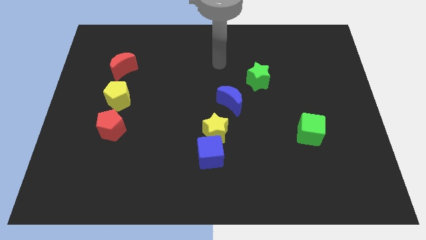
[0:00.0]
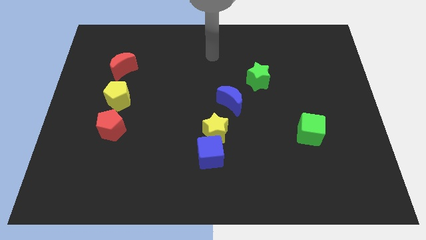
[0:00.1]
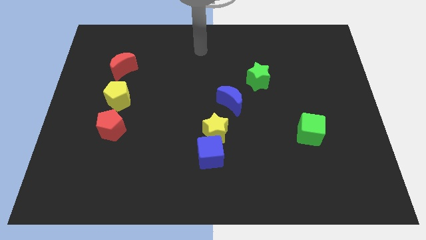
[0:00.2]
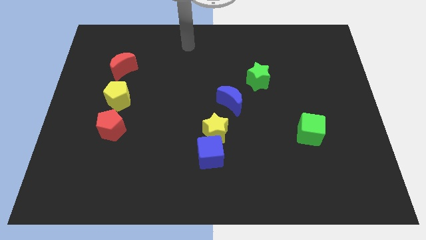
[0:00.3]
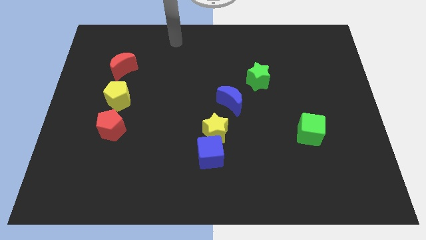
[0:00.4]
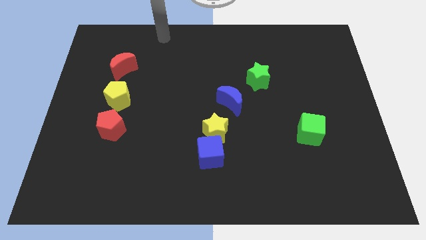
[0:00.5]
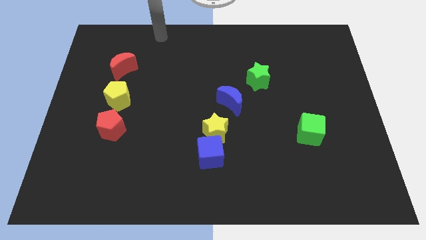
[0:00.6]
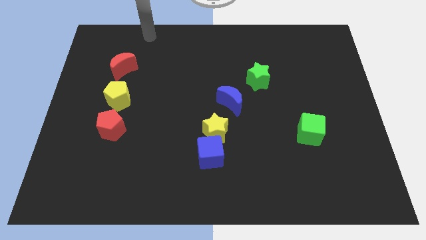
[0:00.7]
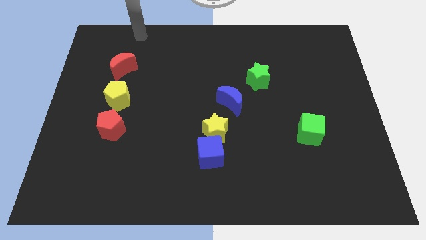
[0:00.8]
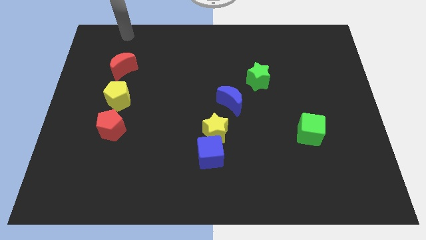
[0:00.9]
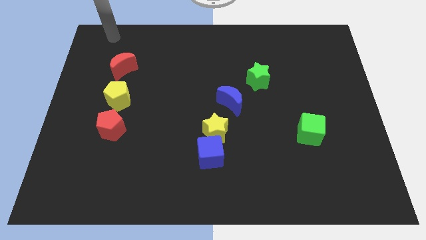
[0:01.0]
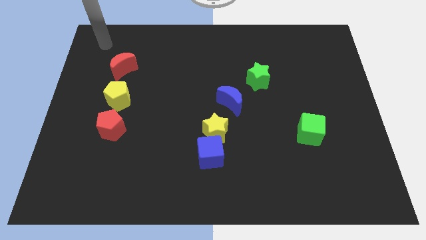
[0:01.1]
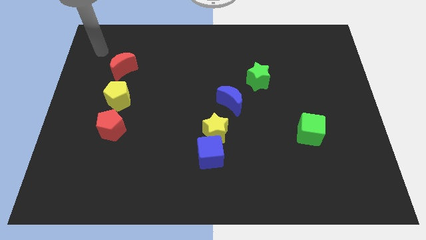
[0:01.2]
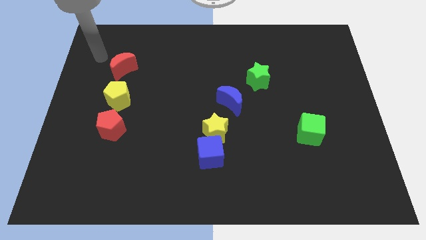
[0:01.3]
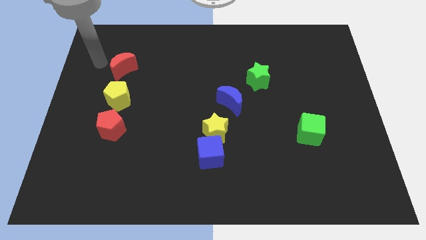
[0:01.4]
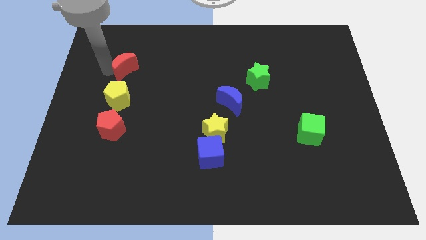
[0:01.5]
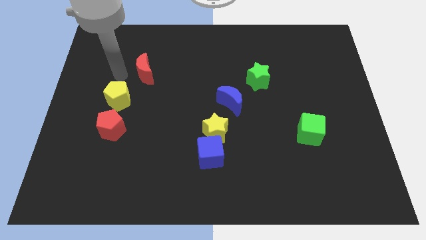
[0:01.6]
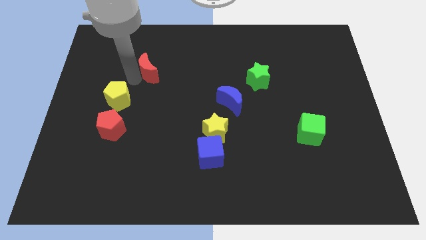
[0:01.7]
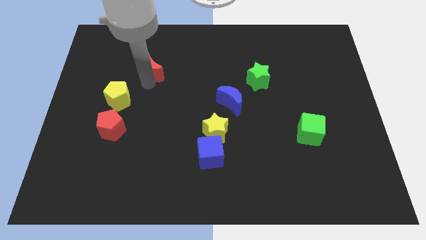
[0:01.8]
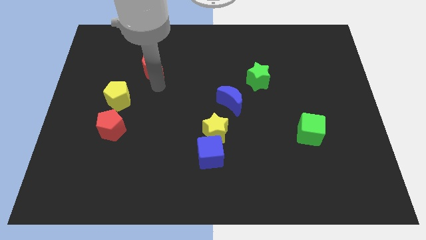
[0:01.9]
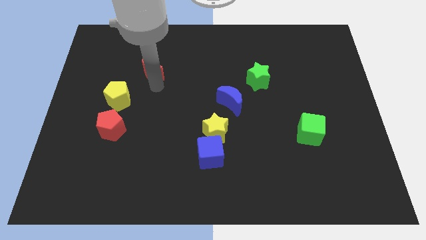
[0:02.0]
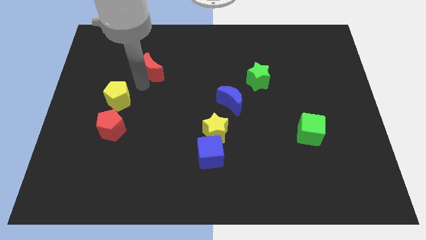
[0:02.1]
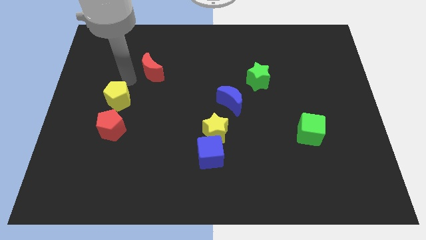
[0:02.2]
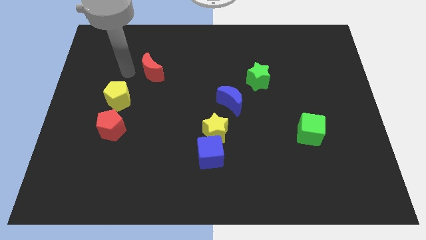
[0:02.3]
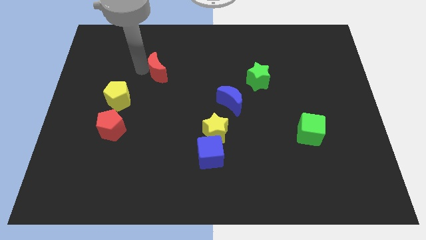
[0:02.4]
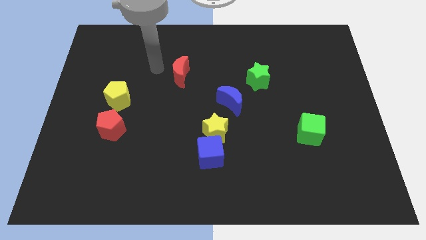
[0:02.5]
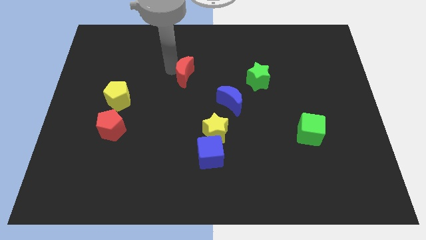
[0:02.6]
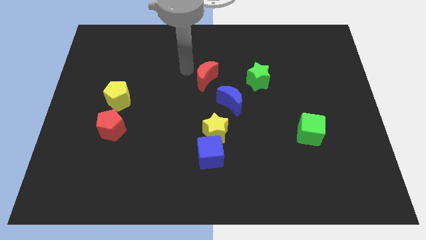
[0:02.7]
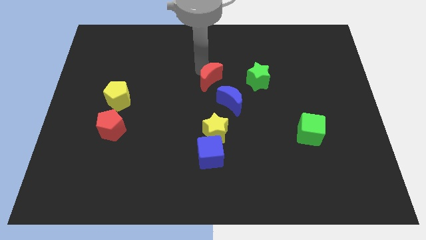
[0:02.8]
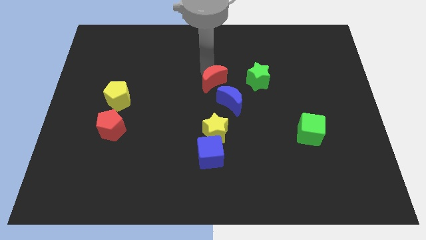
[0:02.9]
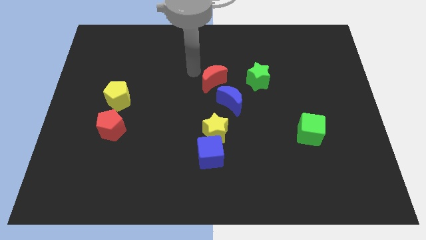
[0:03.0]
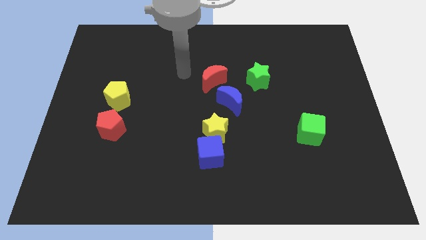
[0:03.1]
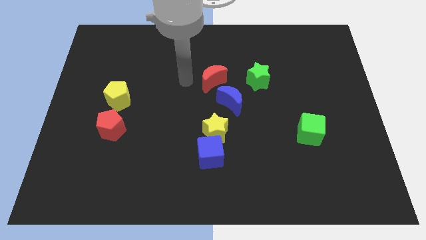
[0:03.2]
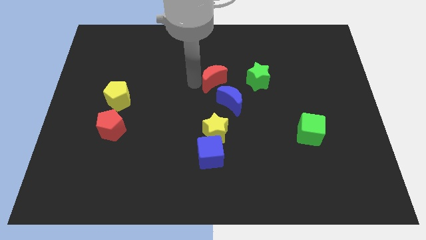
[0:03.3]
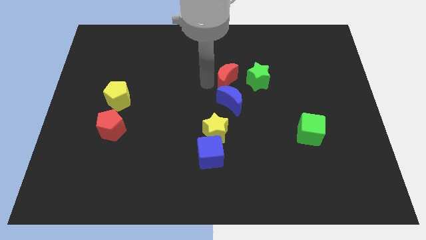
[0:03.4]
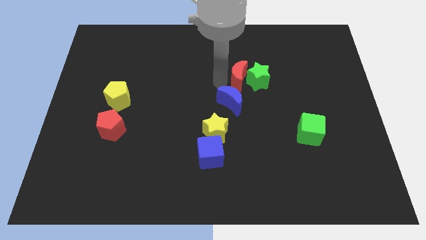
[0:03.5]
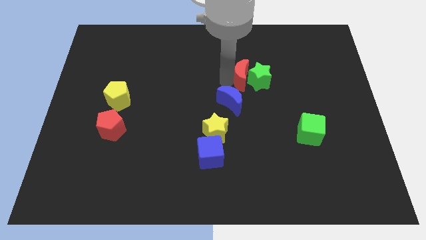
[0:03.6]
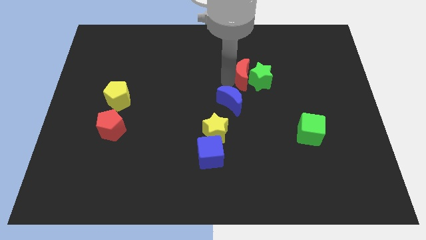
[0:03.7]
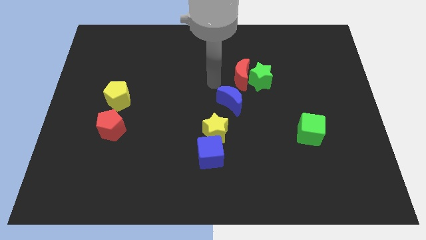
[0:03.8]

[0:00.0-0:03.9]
push the red crescent to the left of the green star

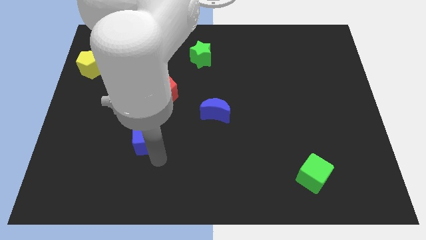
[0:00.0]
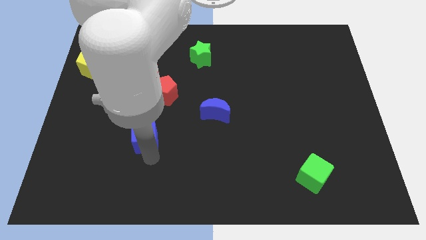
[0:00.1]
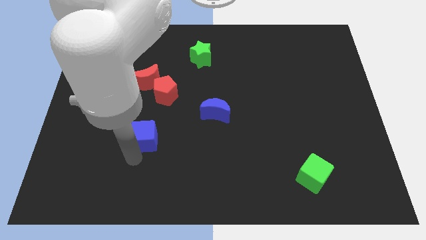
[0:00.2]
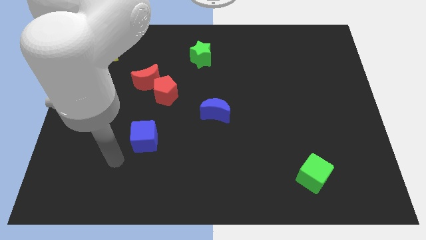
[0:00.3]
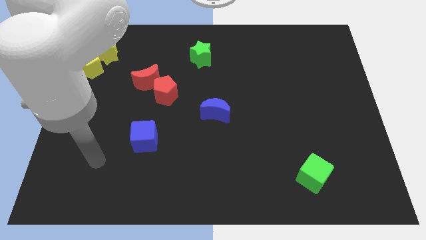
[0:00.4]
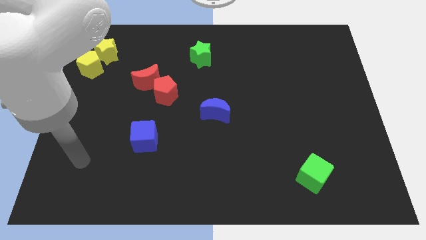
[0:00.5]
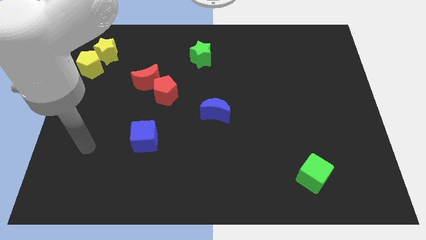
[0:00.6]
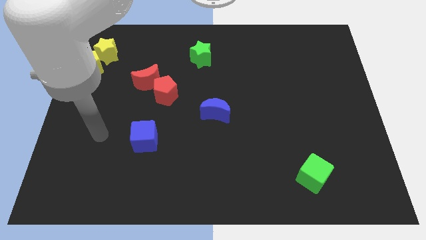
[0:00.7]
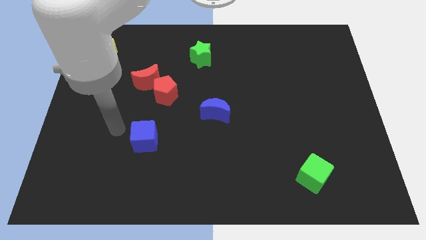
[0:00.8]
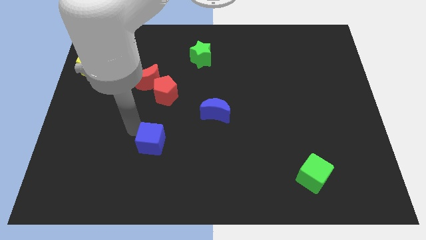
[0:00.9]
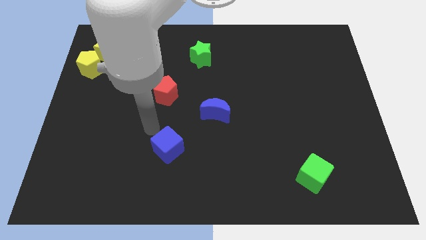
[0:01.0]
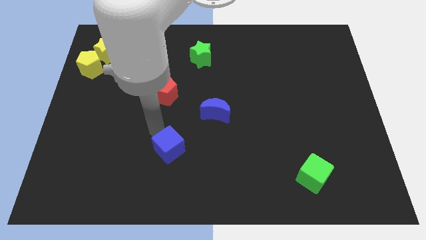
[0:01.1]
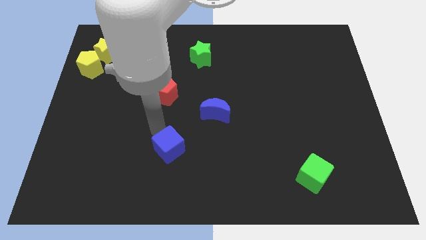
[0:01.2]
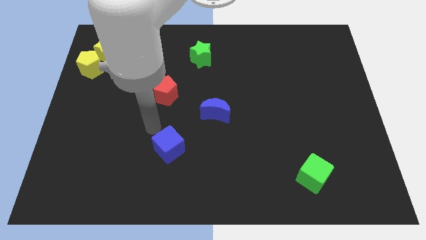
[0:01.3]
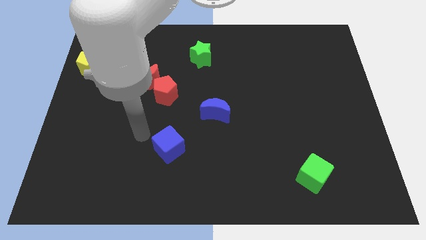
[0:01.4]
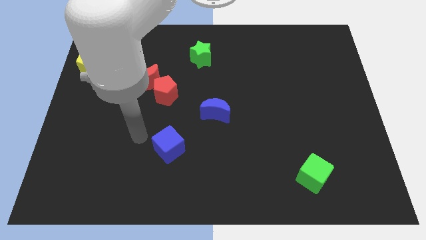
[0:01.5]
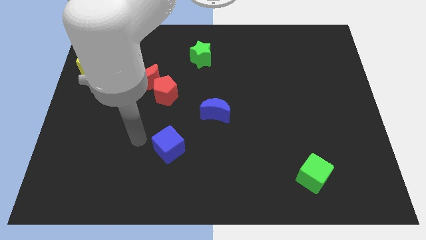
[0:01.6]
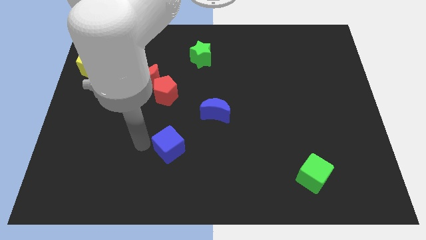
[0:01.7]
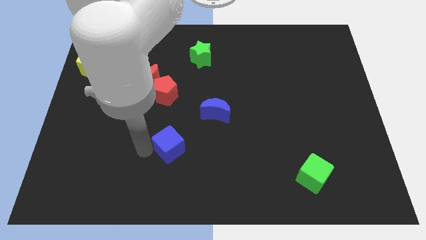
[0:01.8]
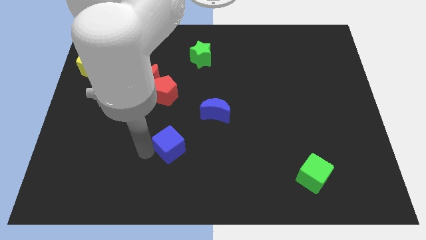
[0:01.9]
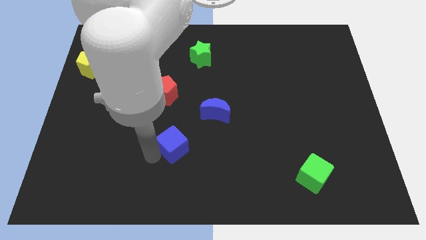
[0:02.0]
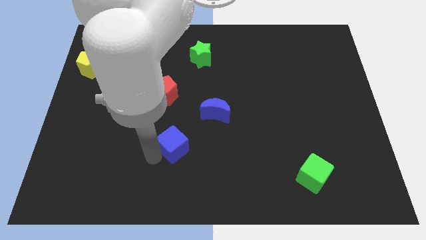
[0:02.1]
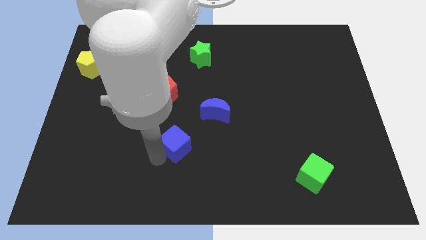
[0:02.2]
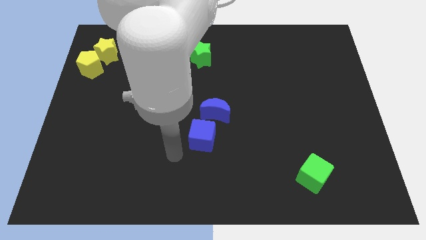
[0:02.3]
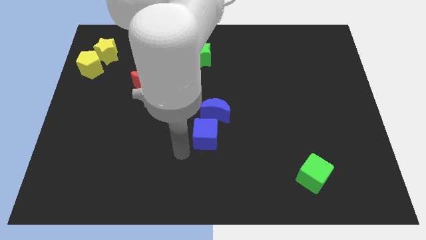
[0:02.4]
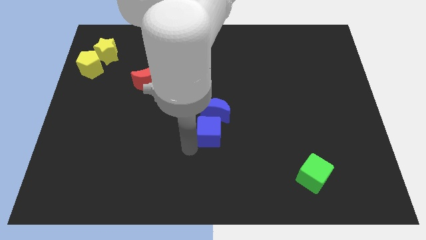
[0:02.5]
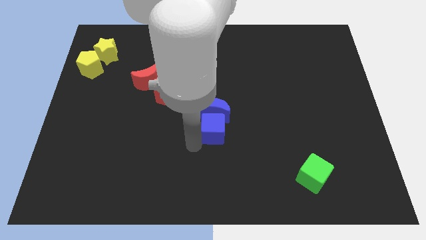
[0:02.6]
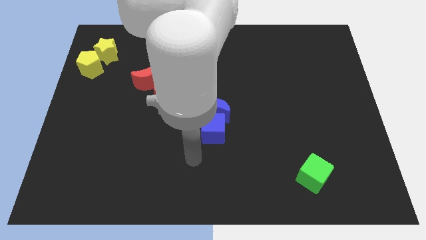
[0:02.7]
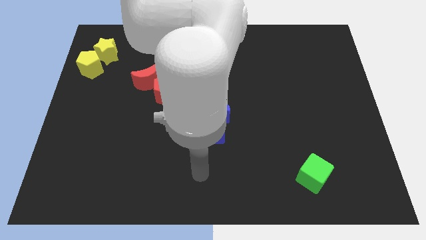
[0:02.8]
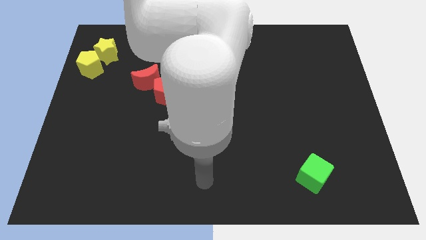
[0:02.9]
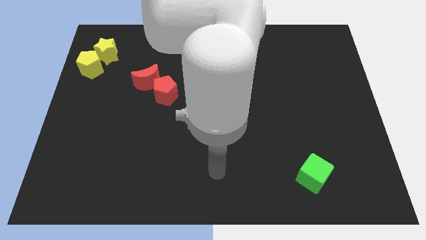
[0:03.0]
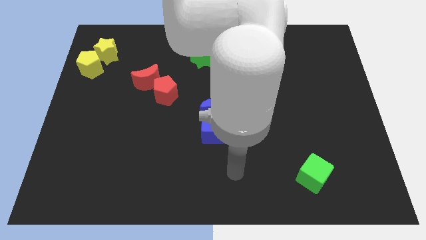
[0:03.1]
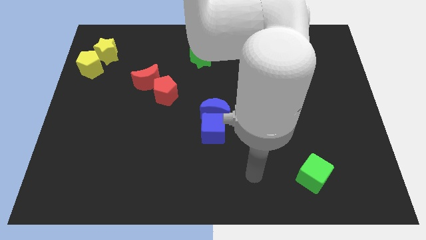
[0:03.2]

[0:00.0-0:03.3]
push the blue cube into the blue moon

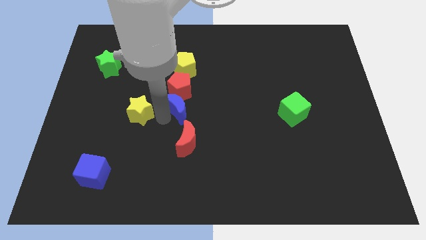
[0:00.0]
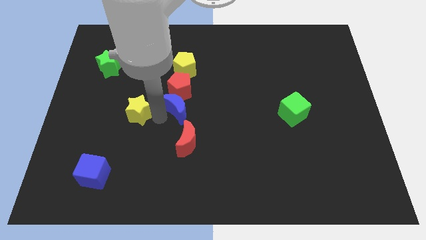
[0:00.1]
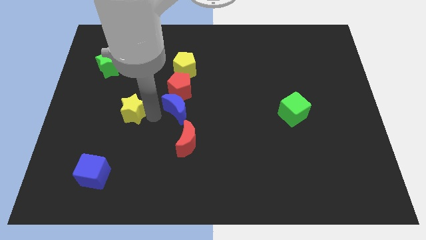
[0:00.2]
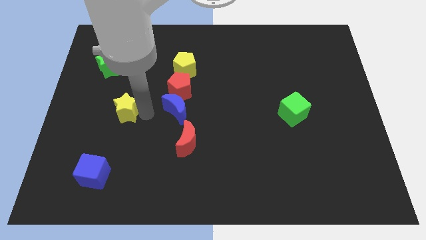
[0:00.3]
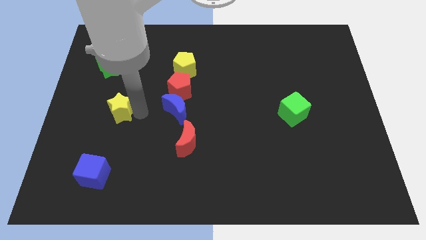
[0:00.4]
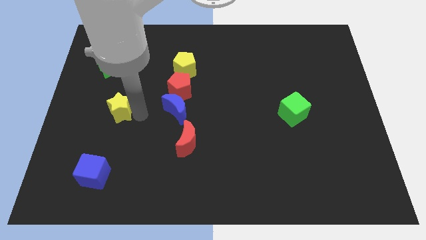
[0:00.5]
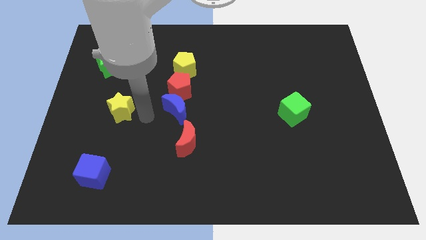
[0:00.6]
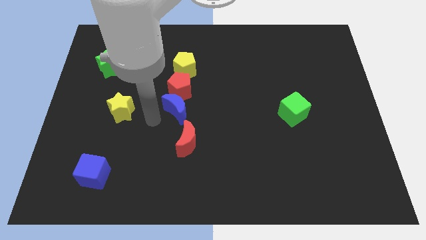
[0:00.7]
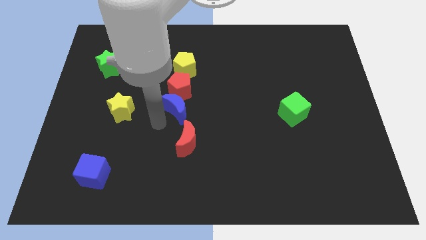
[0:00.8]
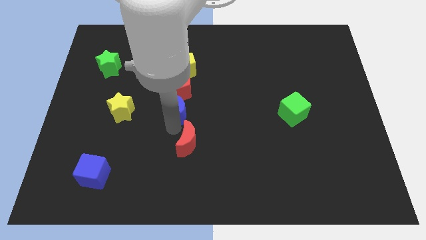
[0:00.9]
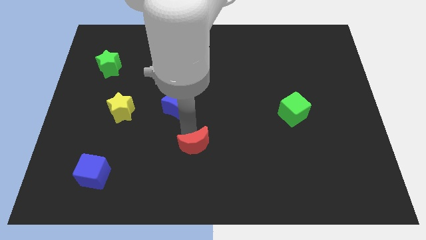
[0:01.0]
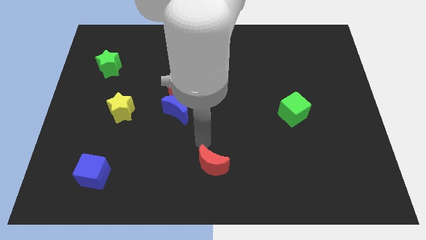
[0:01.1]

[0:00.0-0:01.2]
move the yellow star slightly to the left

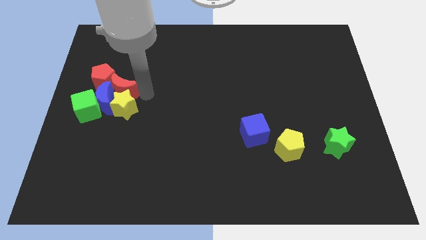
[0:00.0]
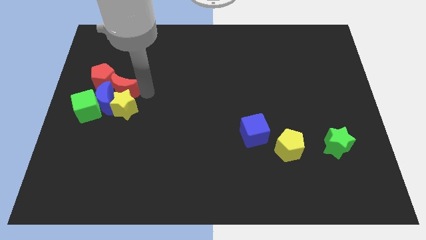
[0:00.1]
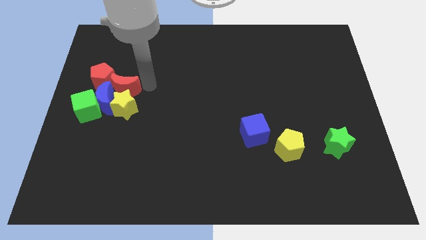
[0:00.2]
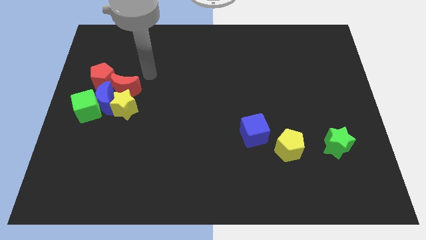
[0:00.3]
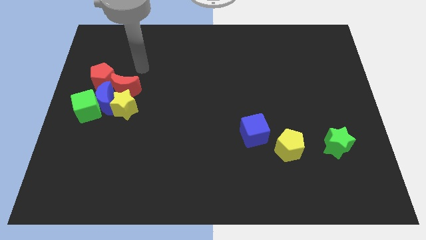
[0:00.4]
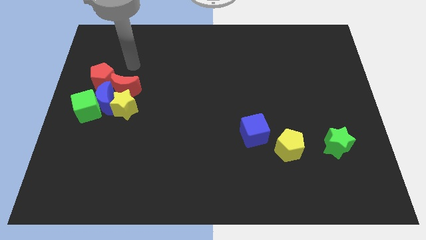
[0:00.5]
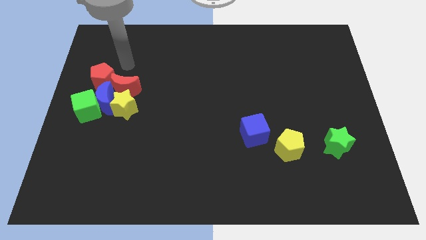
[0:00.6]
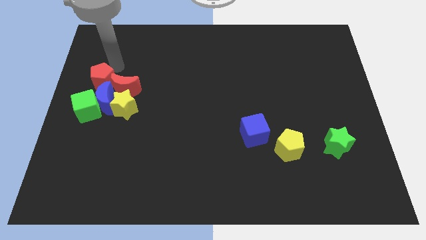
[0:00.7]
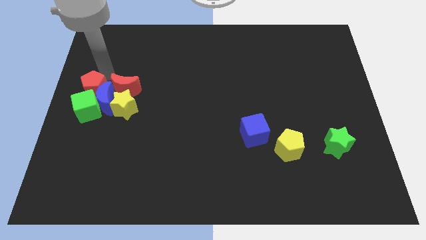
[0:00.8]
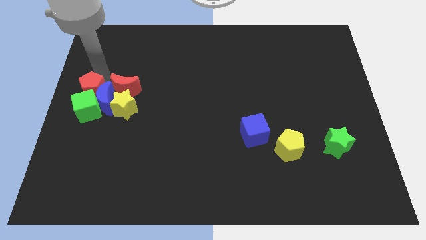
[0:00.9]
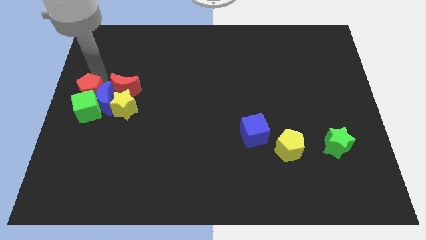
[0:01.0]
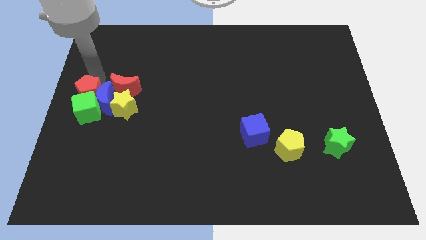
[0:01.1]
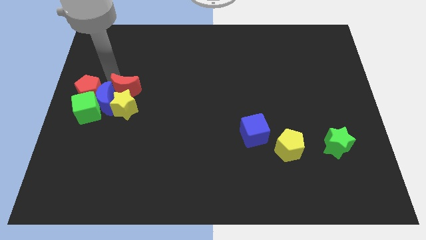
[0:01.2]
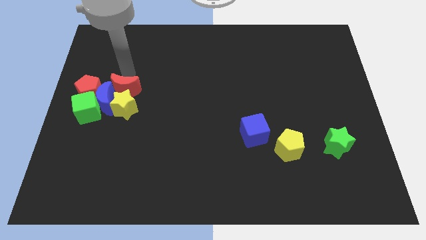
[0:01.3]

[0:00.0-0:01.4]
push the red pentagon in to the group of block
